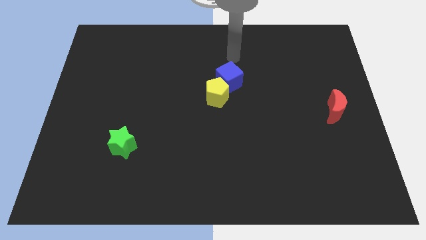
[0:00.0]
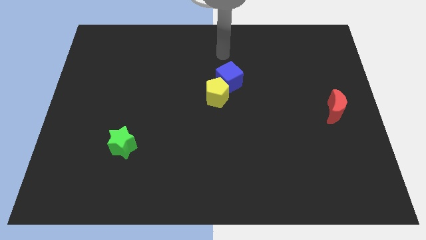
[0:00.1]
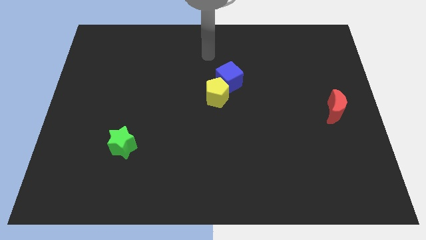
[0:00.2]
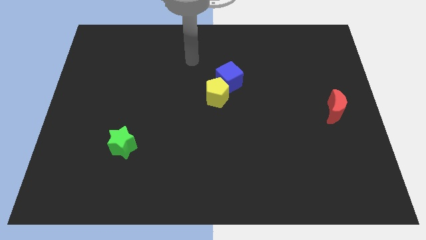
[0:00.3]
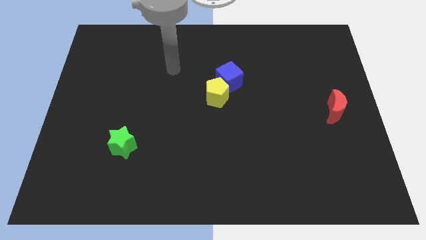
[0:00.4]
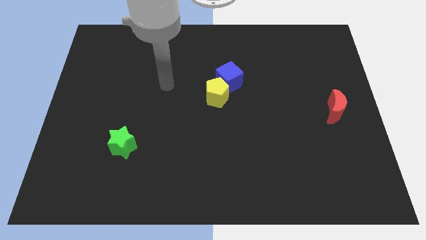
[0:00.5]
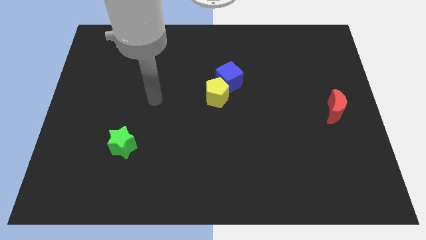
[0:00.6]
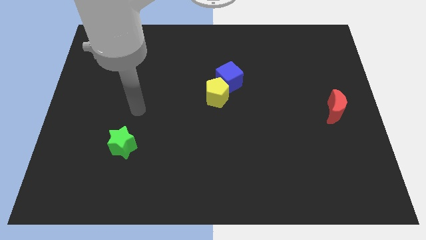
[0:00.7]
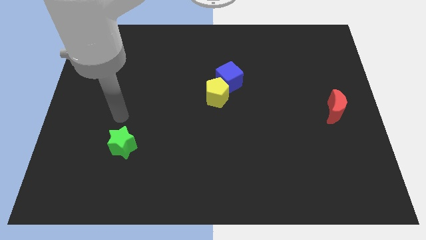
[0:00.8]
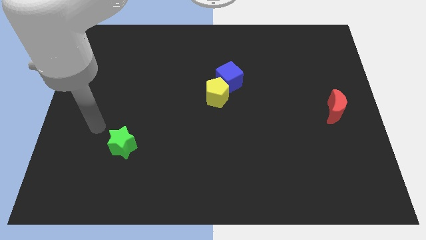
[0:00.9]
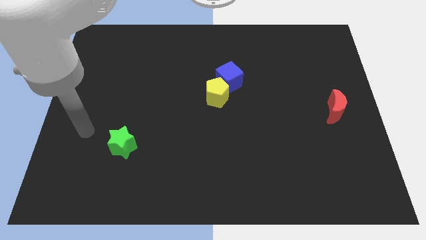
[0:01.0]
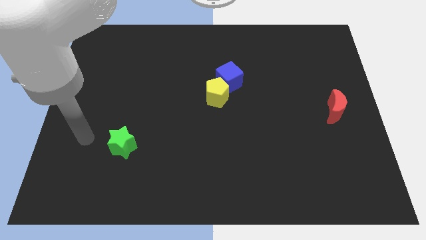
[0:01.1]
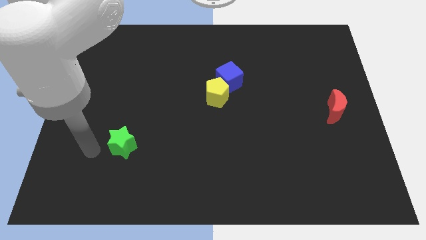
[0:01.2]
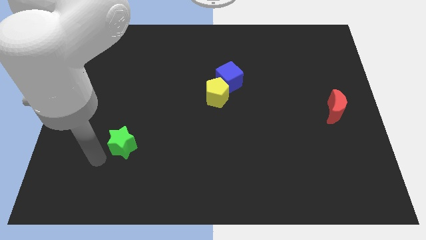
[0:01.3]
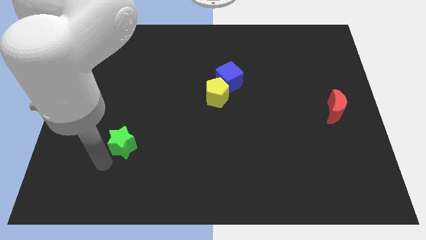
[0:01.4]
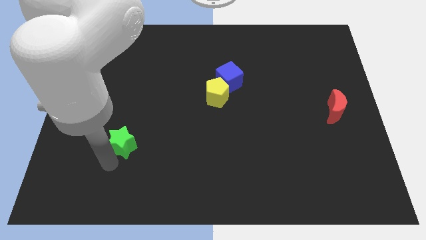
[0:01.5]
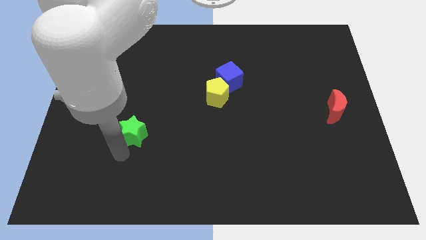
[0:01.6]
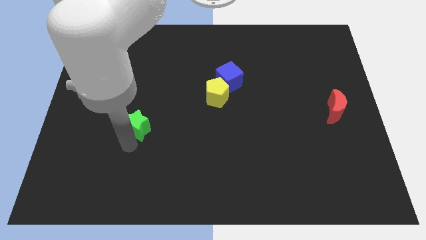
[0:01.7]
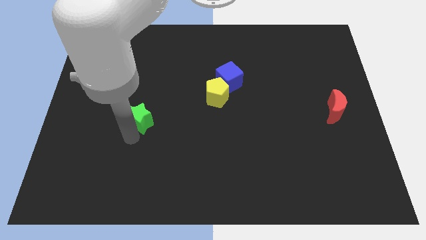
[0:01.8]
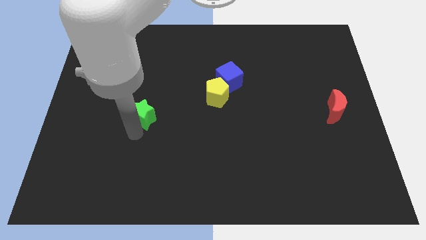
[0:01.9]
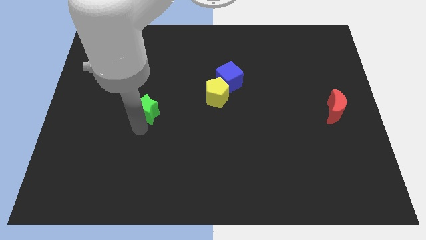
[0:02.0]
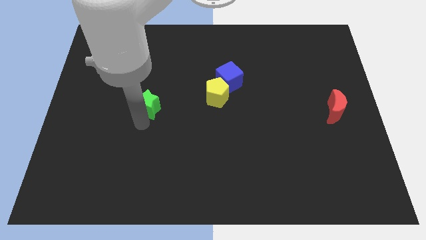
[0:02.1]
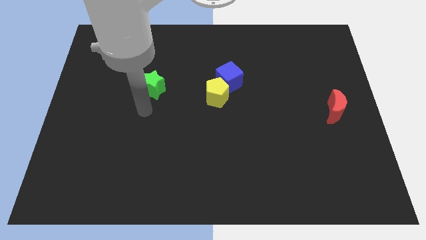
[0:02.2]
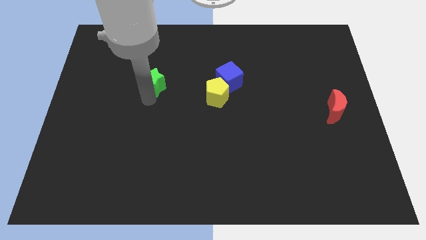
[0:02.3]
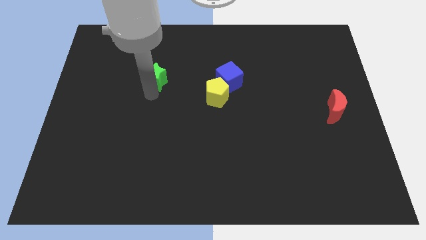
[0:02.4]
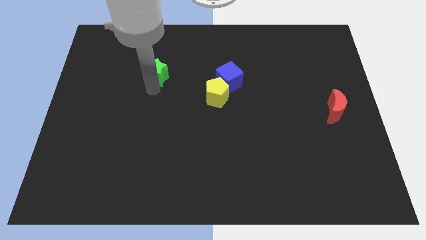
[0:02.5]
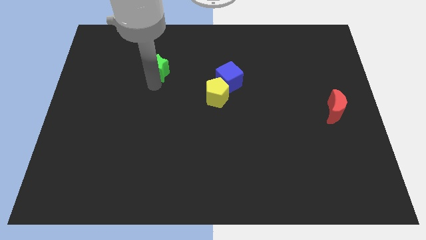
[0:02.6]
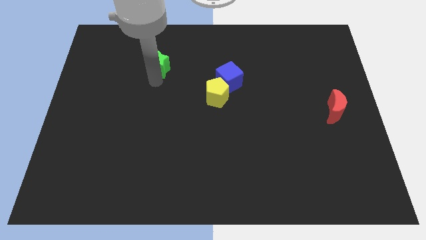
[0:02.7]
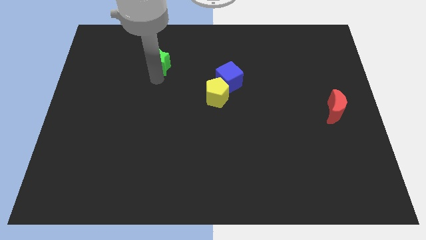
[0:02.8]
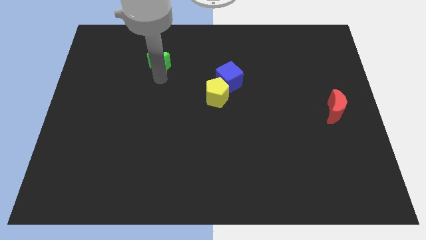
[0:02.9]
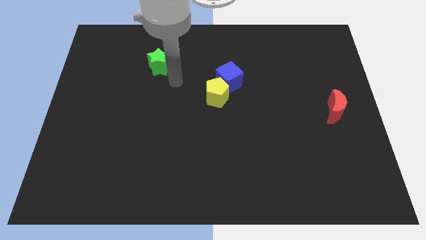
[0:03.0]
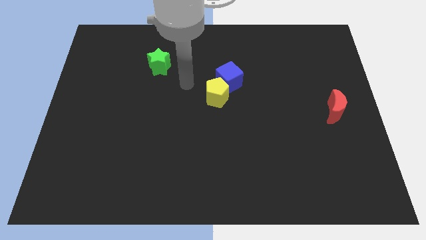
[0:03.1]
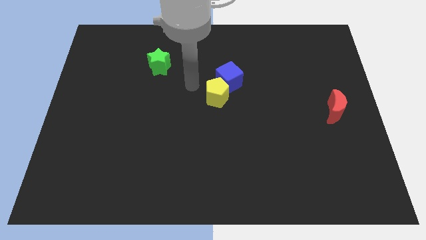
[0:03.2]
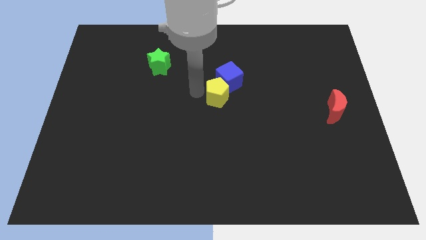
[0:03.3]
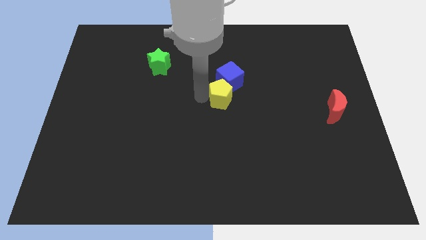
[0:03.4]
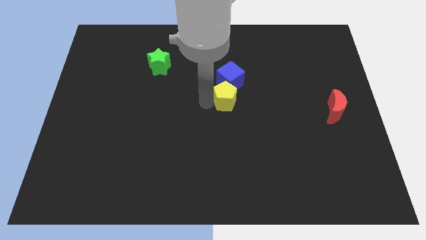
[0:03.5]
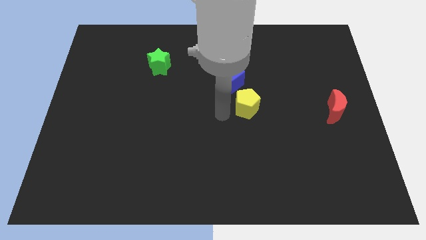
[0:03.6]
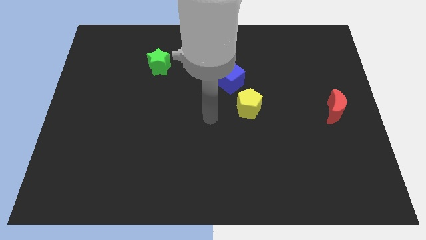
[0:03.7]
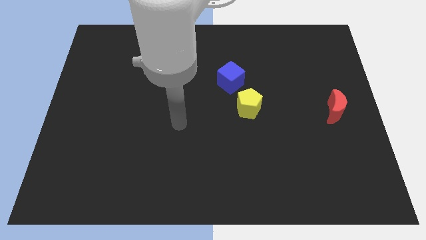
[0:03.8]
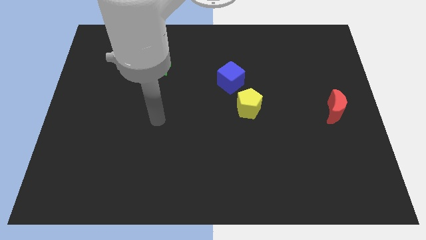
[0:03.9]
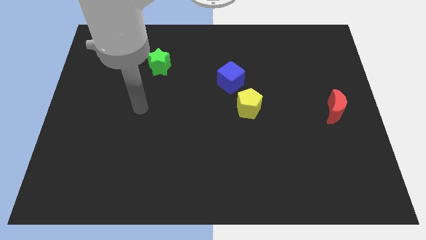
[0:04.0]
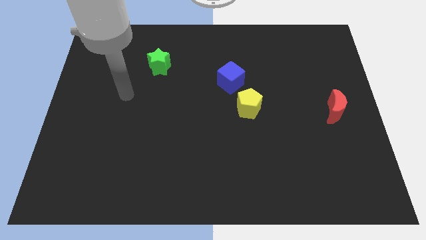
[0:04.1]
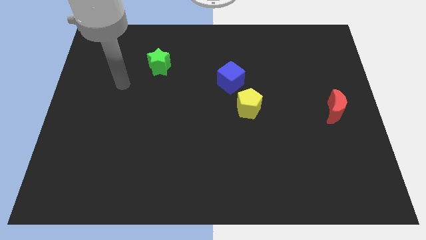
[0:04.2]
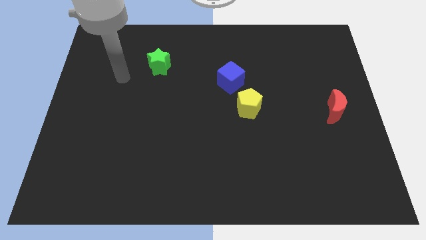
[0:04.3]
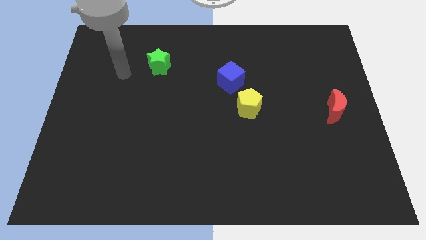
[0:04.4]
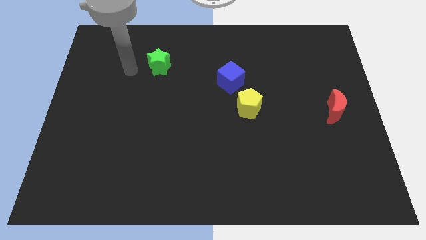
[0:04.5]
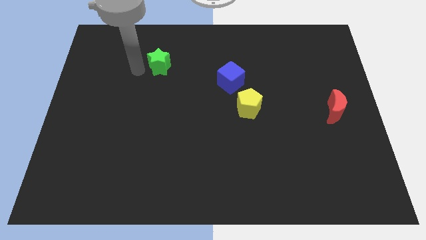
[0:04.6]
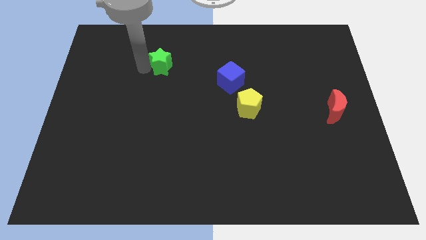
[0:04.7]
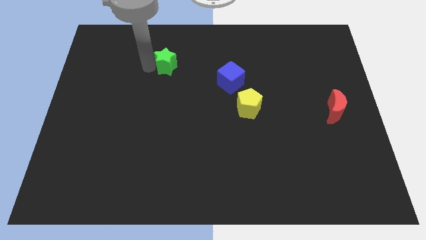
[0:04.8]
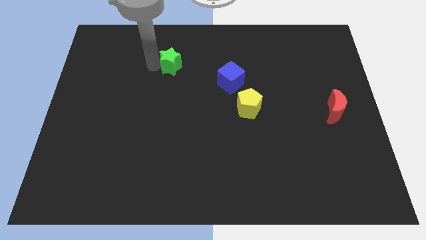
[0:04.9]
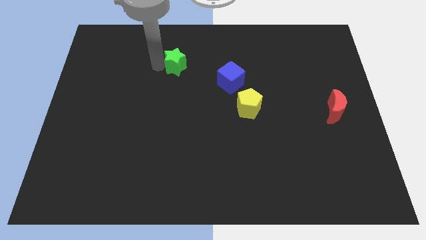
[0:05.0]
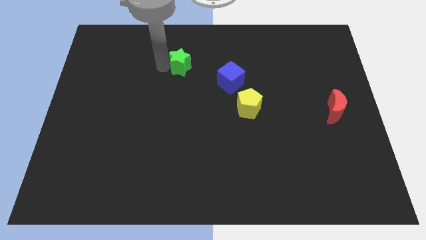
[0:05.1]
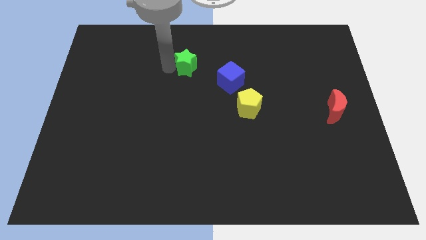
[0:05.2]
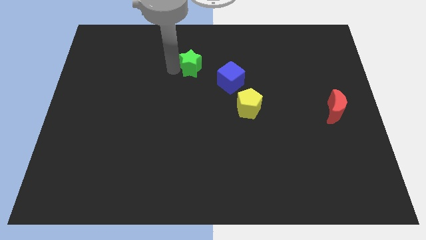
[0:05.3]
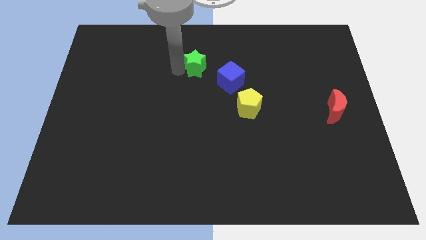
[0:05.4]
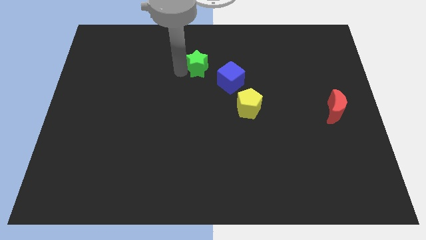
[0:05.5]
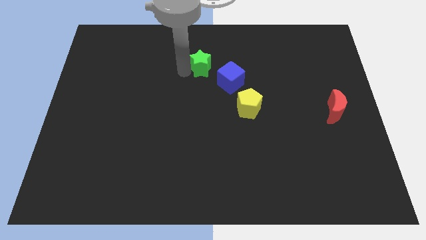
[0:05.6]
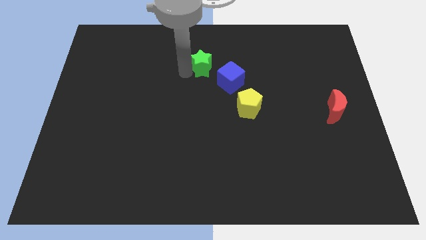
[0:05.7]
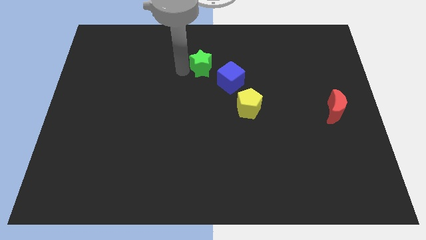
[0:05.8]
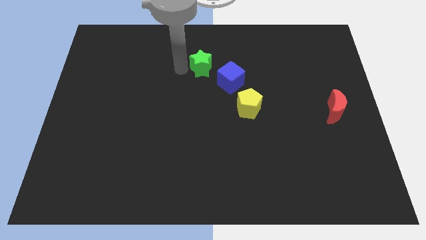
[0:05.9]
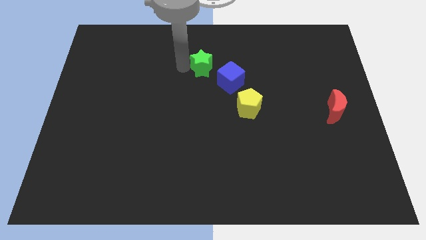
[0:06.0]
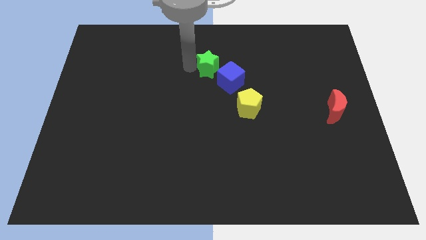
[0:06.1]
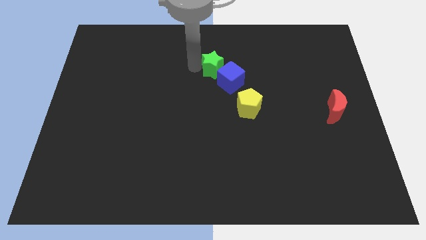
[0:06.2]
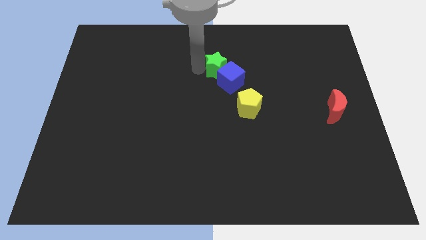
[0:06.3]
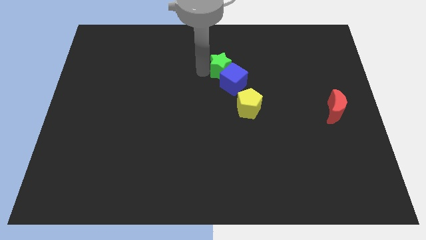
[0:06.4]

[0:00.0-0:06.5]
move the green block close to the cube

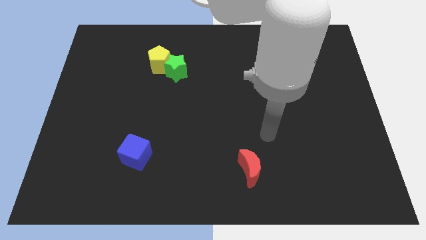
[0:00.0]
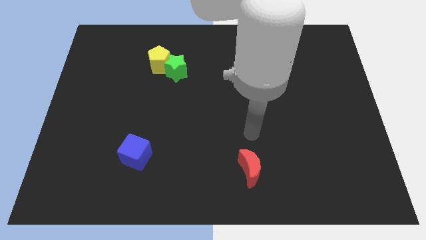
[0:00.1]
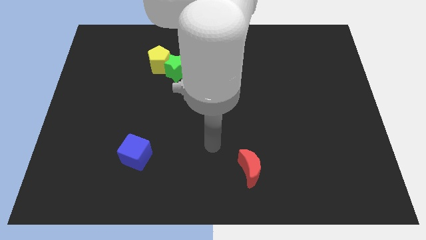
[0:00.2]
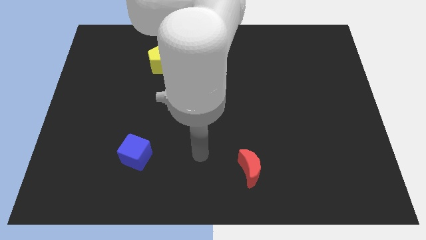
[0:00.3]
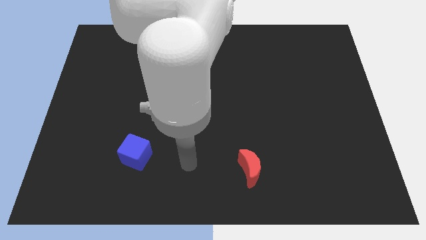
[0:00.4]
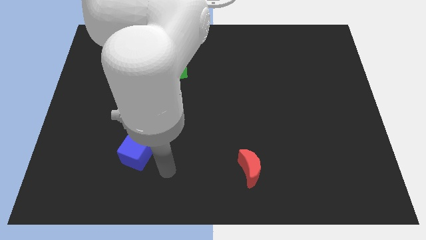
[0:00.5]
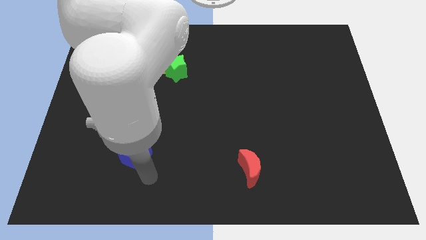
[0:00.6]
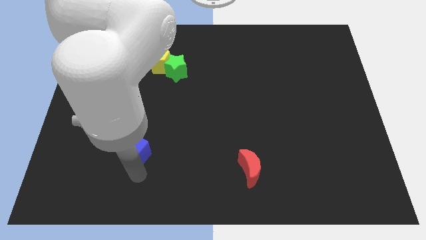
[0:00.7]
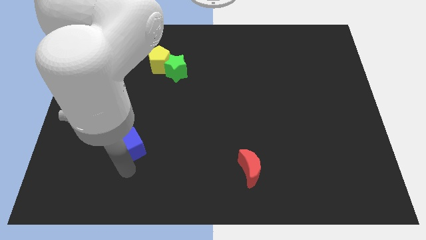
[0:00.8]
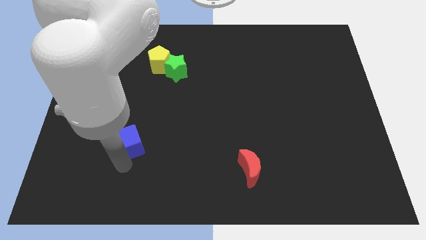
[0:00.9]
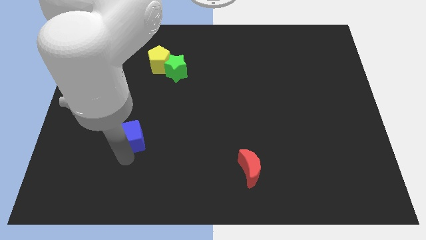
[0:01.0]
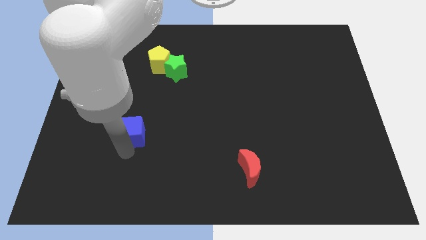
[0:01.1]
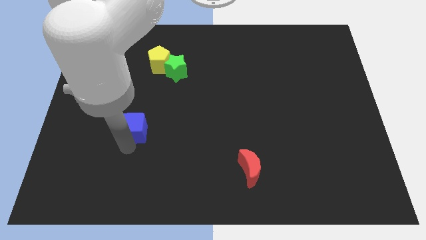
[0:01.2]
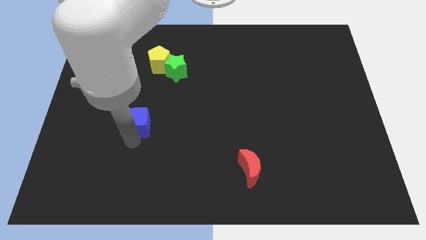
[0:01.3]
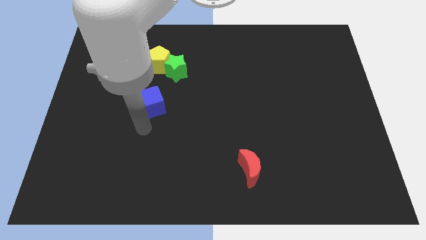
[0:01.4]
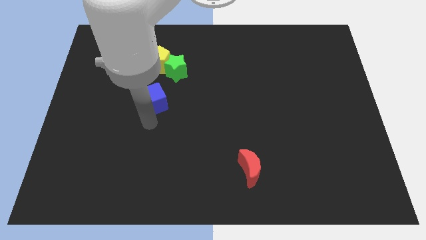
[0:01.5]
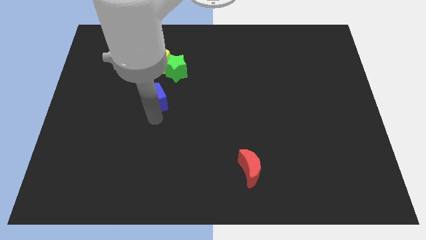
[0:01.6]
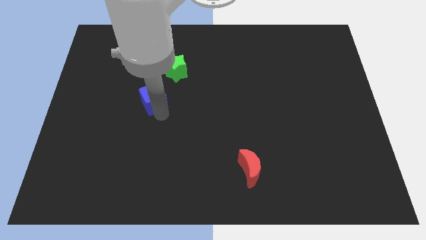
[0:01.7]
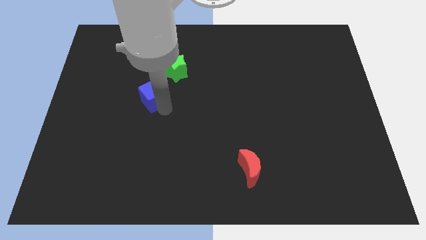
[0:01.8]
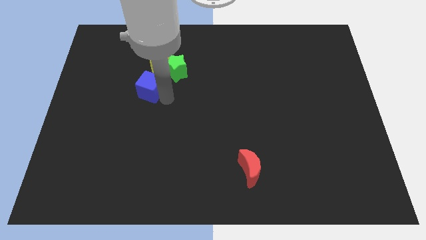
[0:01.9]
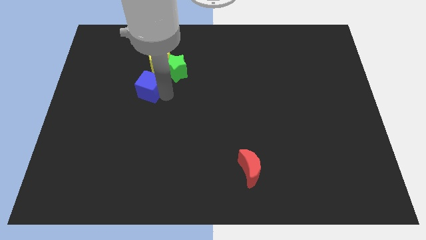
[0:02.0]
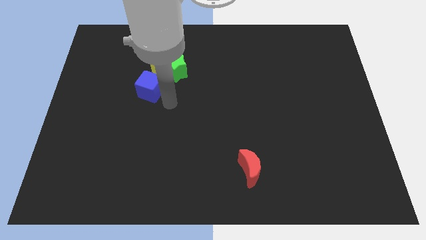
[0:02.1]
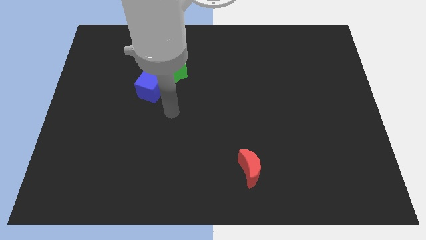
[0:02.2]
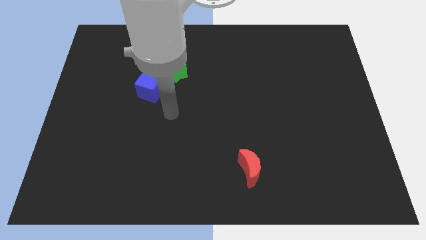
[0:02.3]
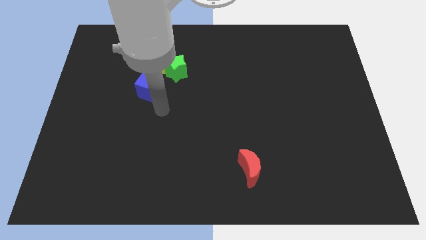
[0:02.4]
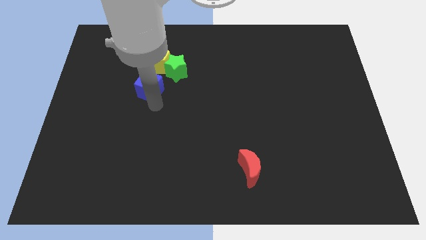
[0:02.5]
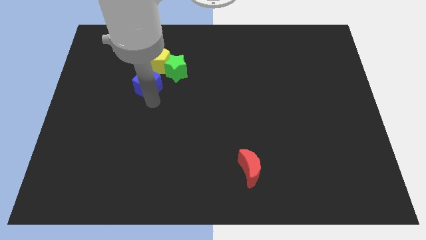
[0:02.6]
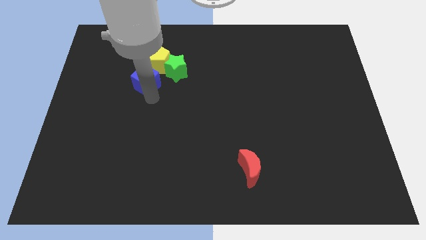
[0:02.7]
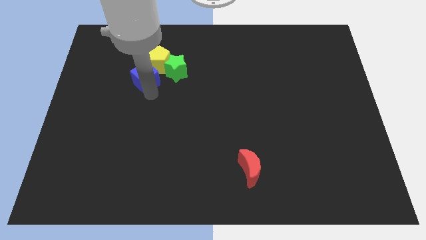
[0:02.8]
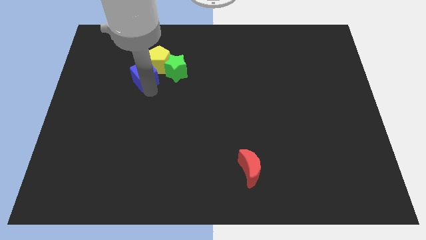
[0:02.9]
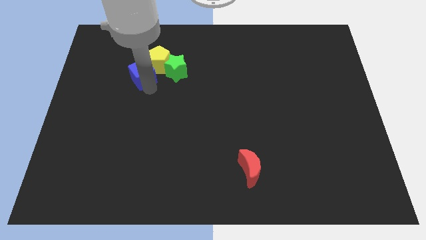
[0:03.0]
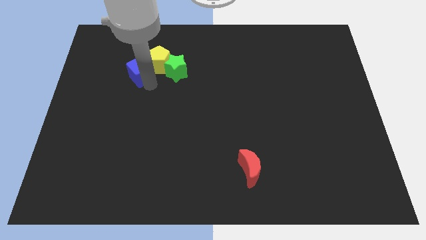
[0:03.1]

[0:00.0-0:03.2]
put the blue cube close to the pentagon
